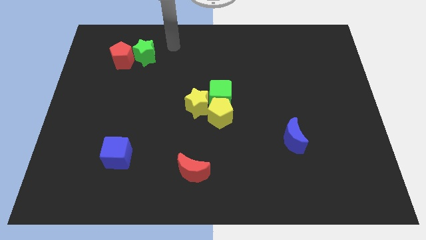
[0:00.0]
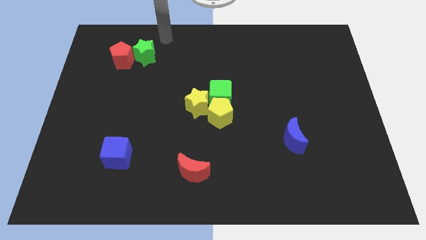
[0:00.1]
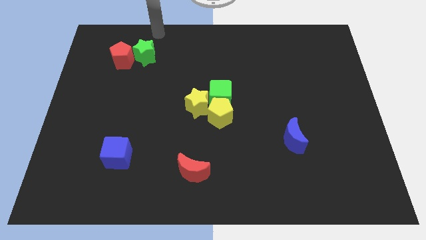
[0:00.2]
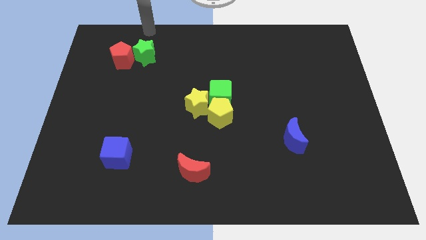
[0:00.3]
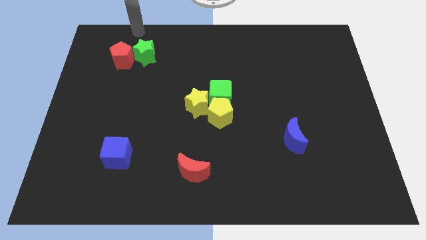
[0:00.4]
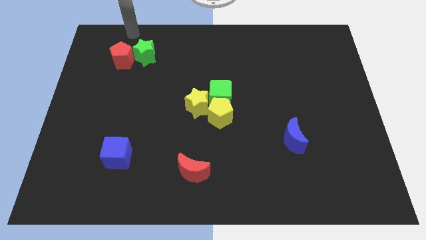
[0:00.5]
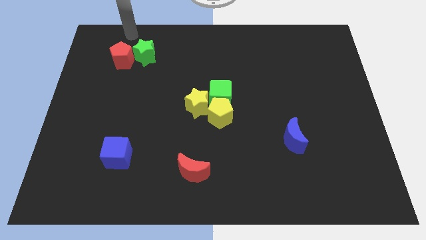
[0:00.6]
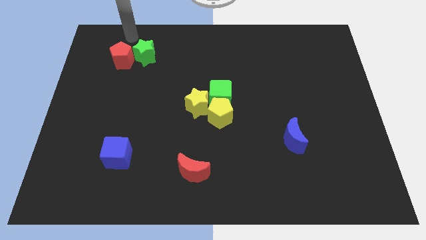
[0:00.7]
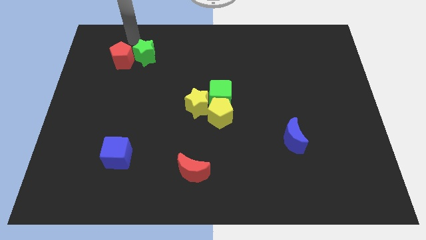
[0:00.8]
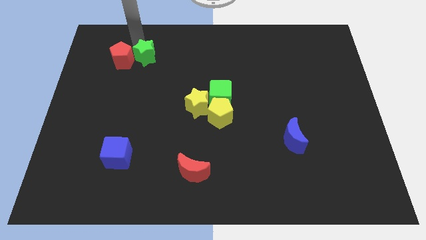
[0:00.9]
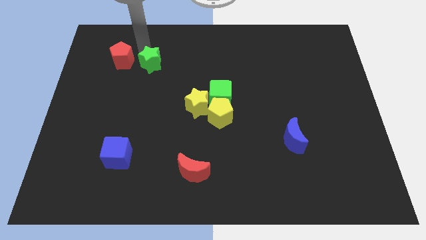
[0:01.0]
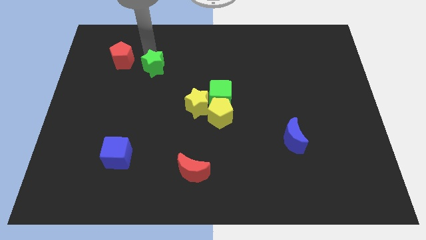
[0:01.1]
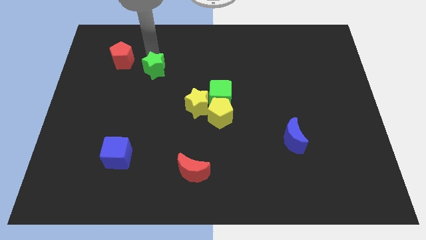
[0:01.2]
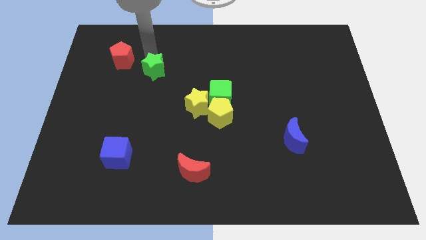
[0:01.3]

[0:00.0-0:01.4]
separate the green star from the red penatgon

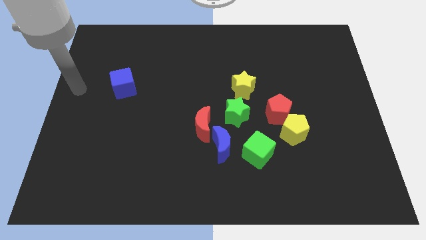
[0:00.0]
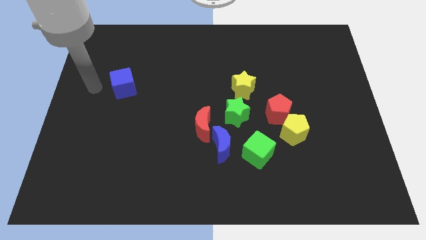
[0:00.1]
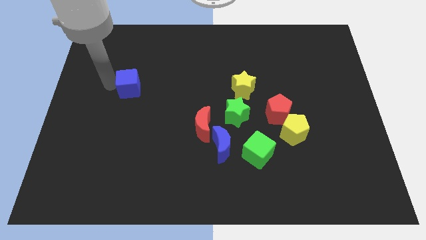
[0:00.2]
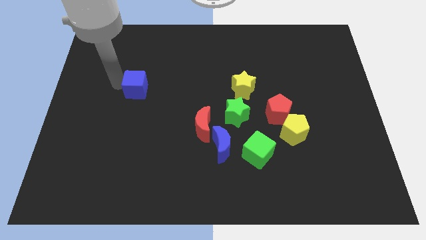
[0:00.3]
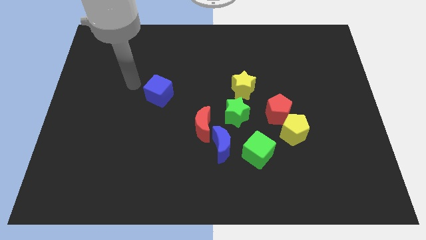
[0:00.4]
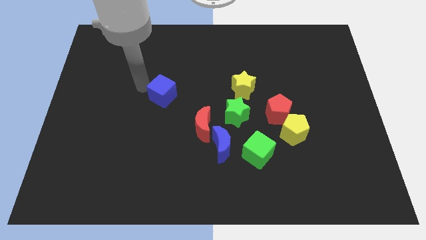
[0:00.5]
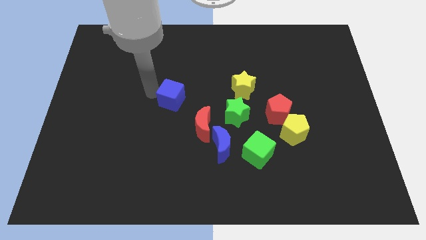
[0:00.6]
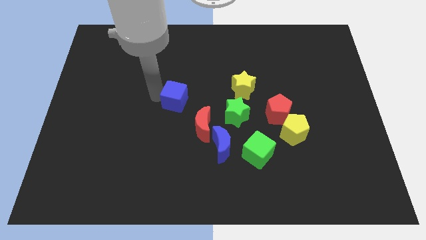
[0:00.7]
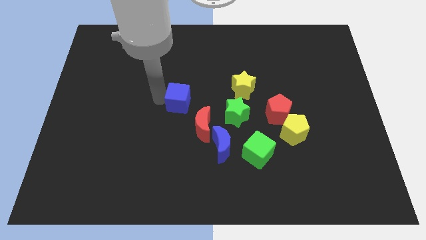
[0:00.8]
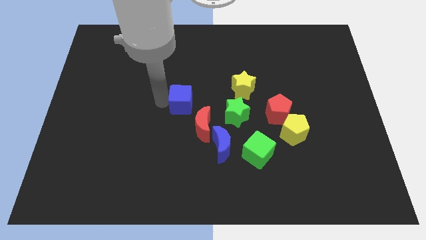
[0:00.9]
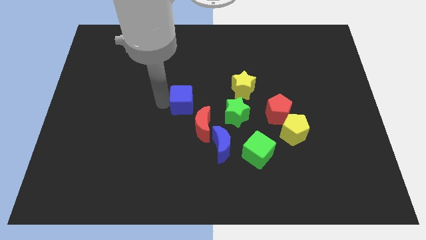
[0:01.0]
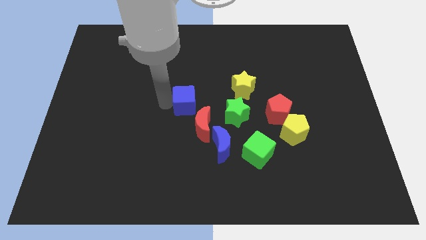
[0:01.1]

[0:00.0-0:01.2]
push the blue cube slightly towards the green star

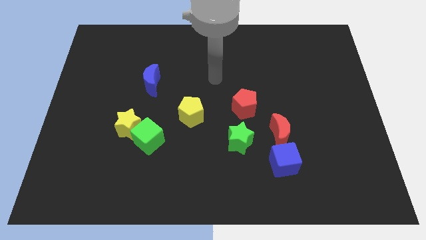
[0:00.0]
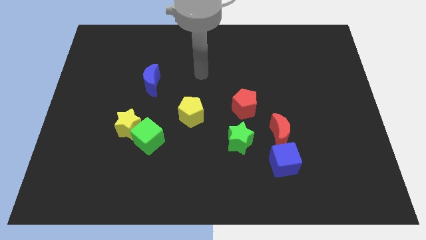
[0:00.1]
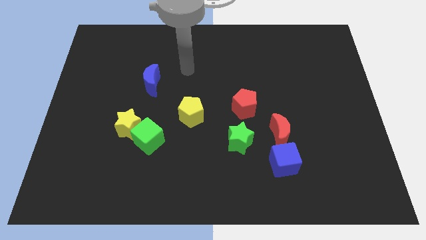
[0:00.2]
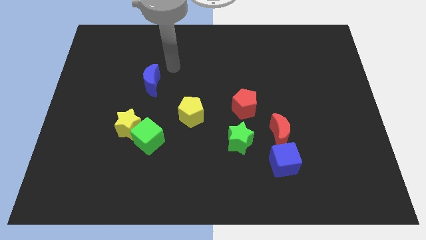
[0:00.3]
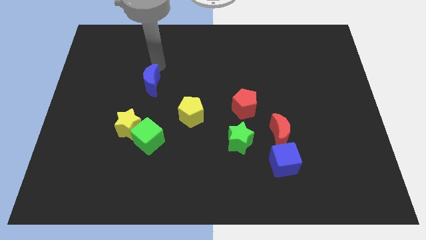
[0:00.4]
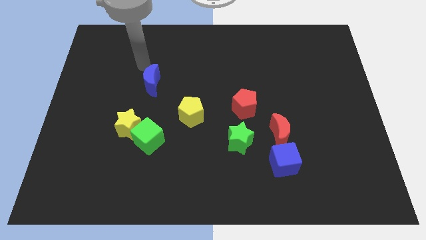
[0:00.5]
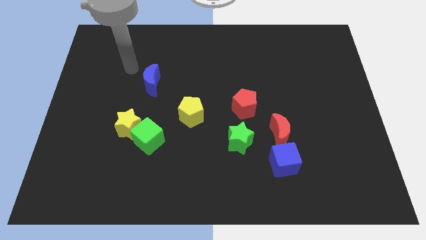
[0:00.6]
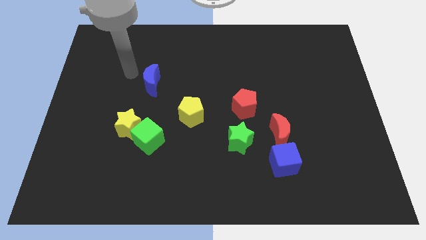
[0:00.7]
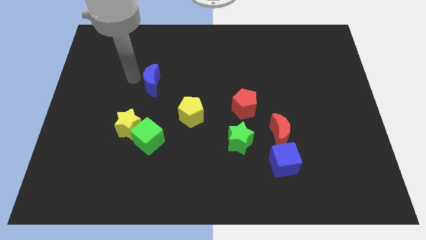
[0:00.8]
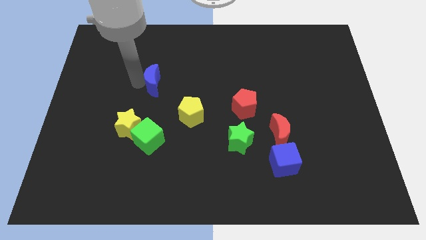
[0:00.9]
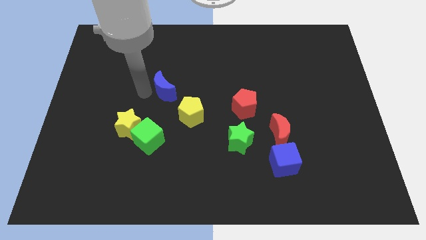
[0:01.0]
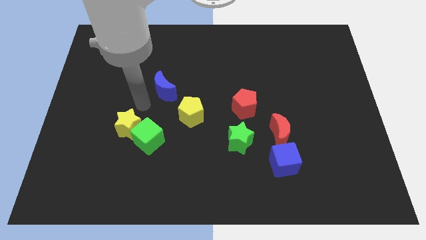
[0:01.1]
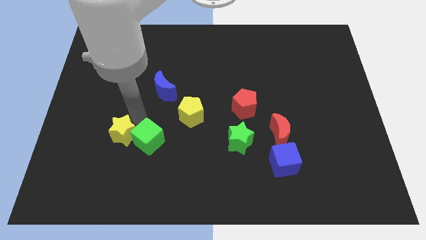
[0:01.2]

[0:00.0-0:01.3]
place blue moon to the top left of yellow pentagon

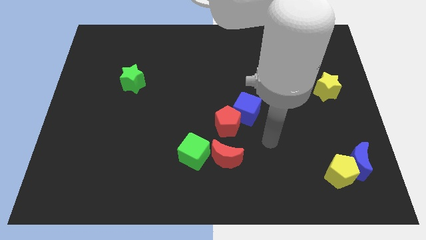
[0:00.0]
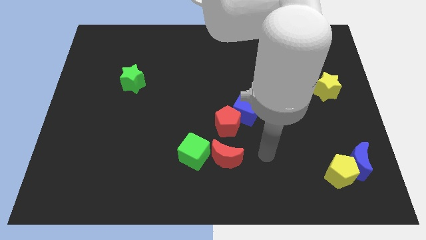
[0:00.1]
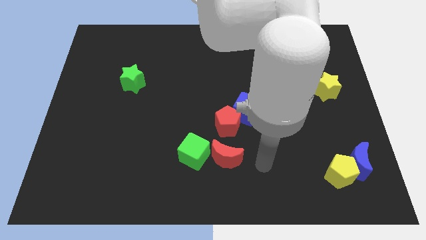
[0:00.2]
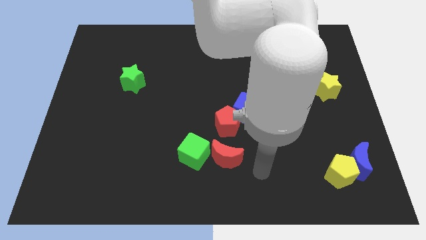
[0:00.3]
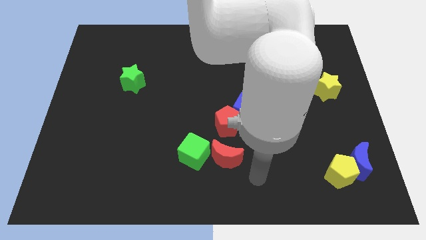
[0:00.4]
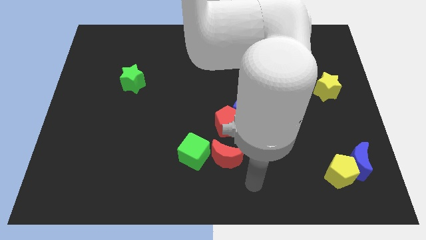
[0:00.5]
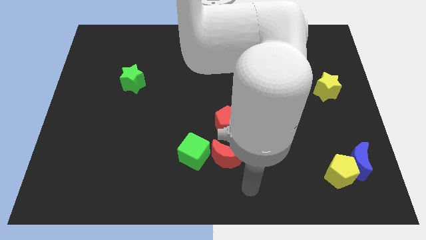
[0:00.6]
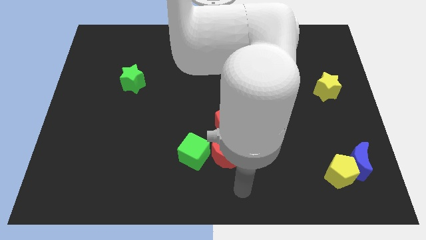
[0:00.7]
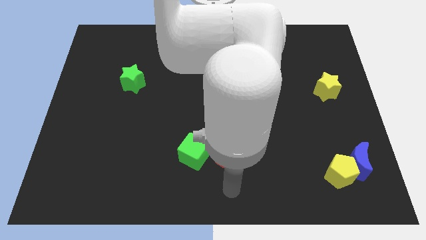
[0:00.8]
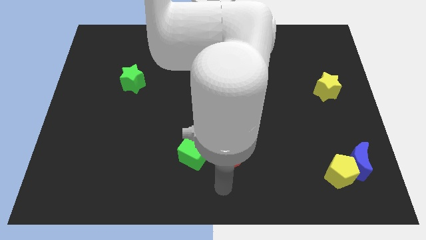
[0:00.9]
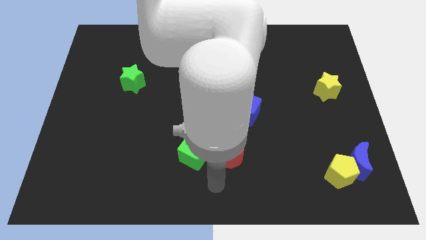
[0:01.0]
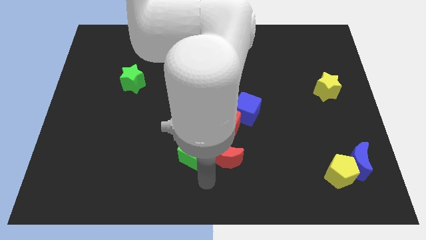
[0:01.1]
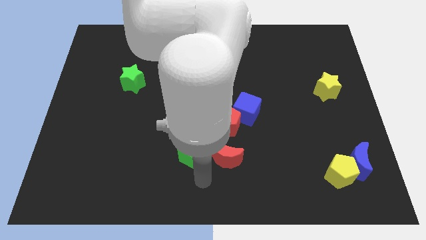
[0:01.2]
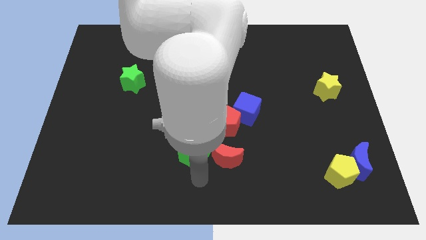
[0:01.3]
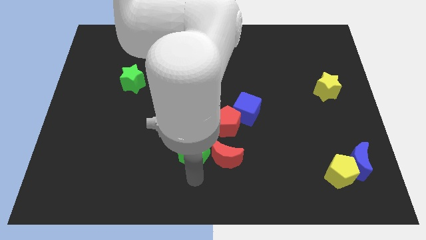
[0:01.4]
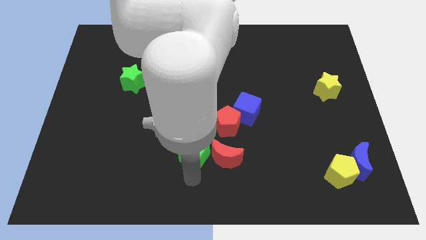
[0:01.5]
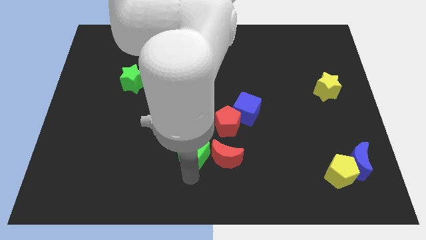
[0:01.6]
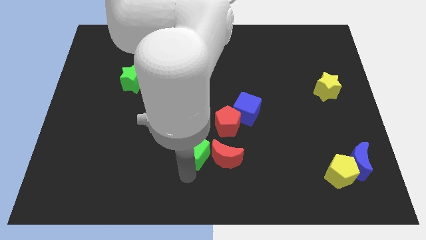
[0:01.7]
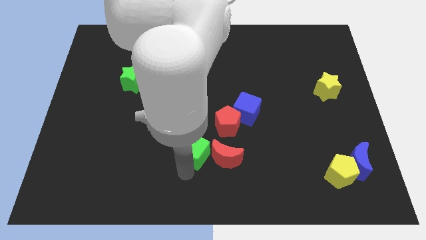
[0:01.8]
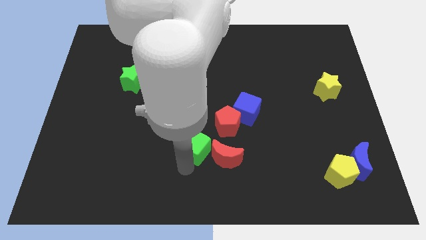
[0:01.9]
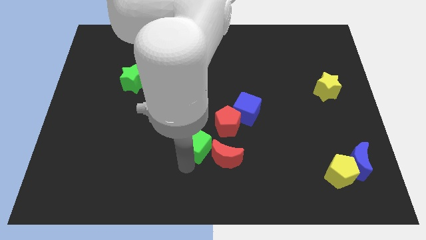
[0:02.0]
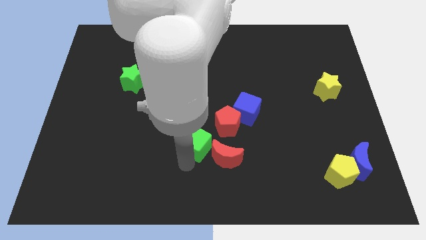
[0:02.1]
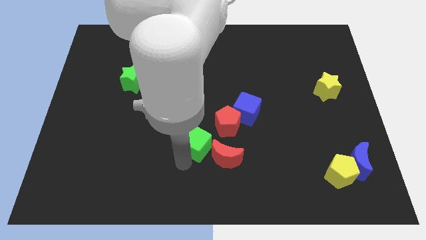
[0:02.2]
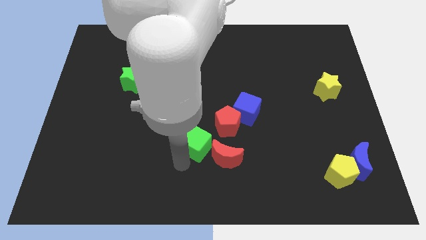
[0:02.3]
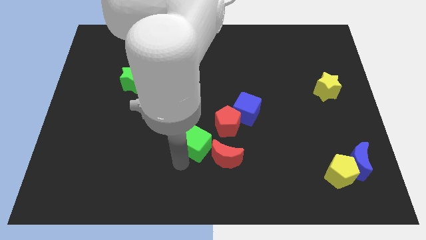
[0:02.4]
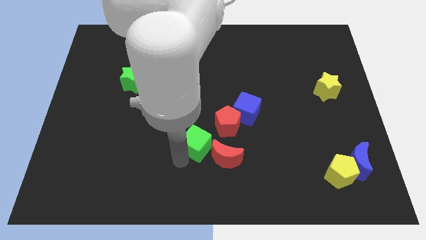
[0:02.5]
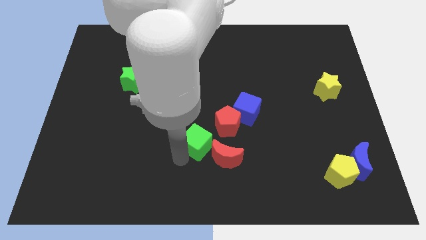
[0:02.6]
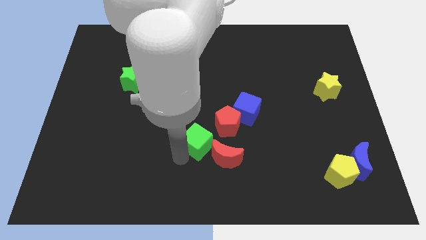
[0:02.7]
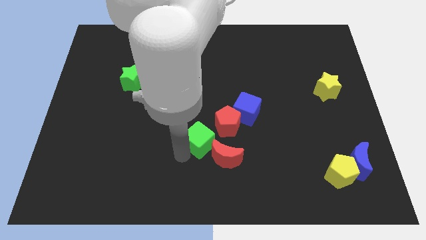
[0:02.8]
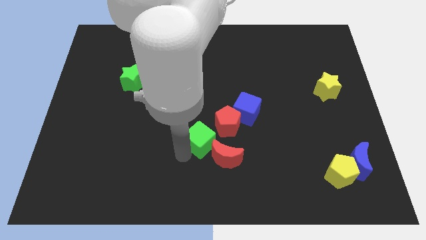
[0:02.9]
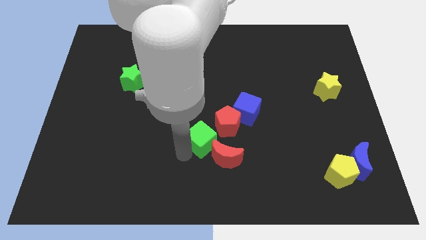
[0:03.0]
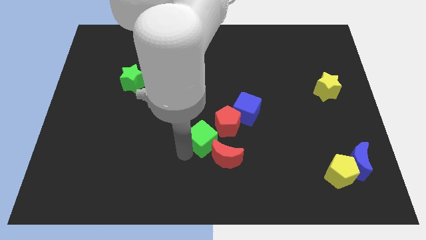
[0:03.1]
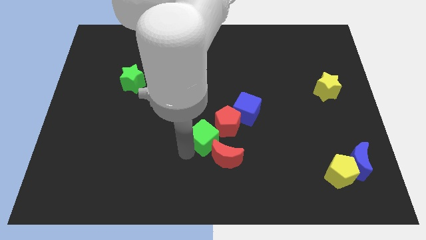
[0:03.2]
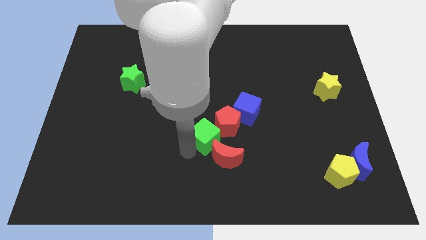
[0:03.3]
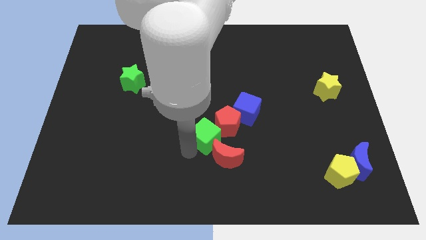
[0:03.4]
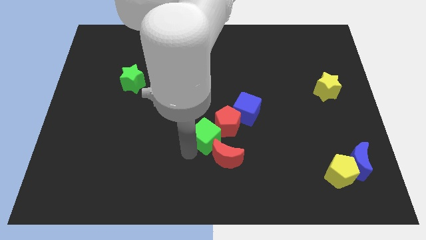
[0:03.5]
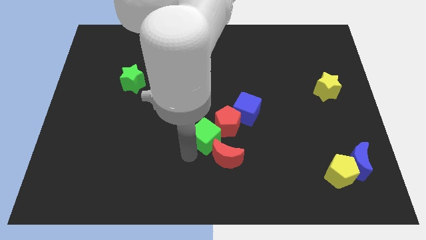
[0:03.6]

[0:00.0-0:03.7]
move the green cube to the bottom left of the red pentagon

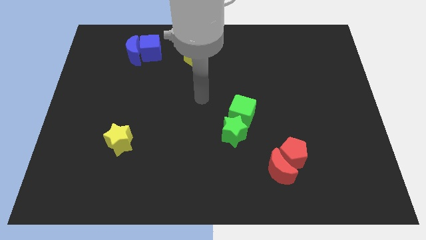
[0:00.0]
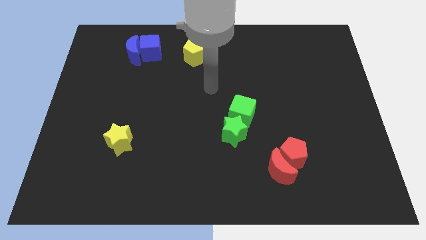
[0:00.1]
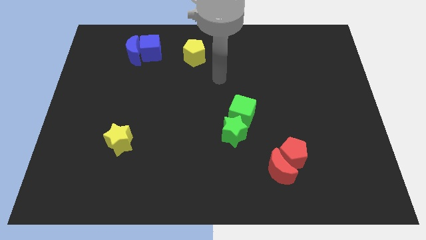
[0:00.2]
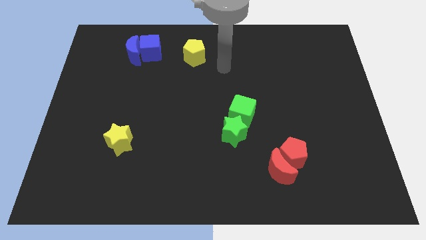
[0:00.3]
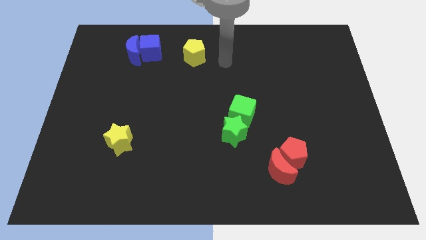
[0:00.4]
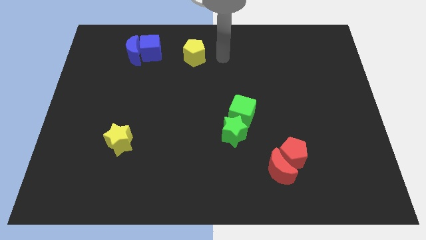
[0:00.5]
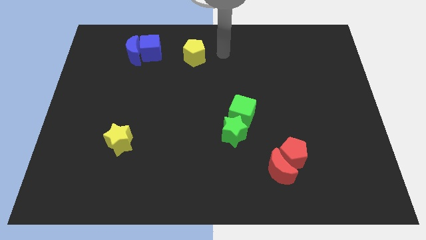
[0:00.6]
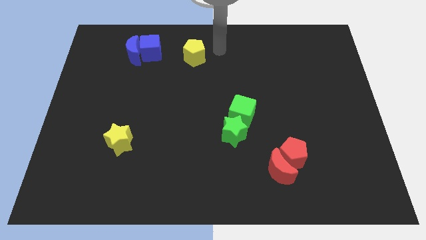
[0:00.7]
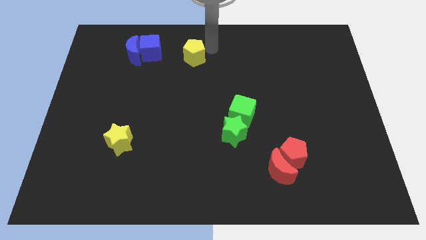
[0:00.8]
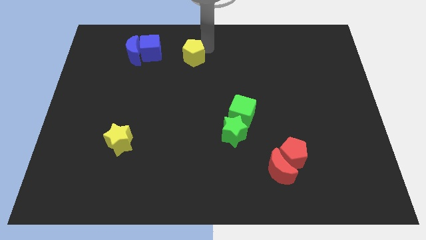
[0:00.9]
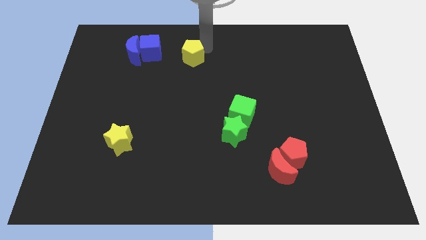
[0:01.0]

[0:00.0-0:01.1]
tap your arm on top right of yellow pentagon

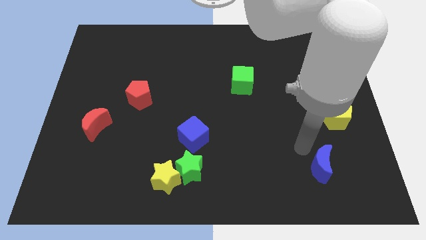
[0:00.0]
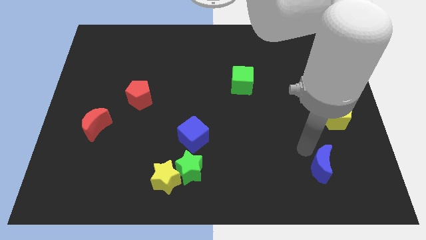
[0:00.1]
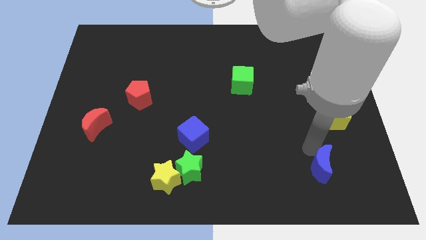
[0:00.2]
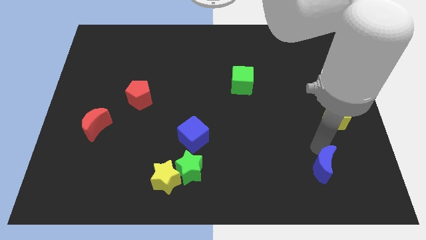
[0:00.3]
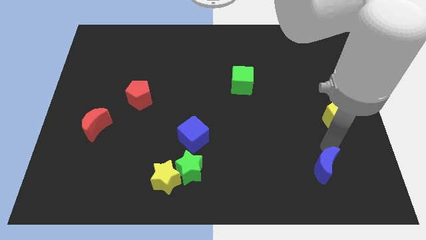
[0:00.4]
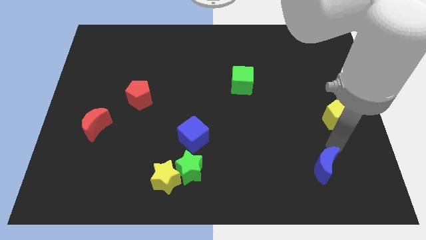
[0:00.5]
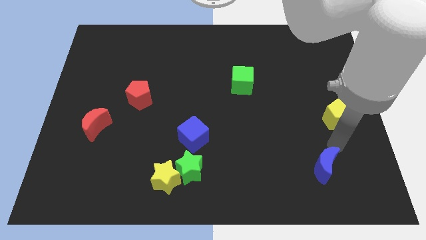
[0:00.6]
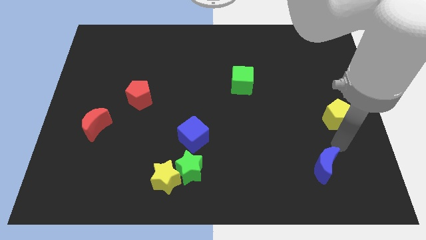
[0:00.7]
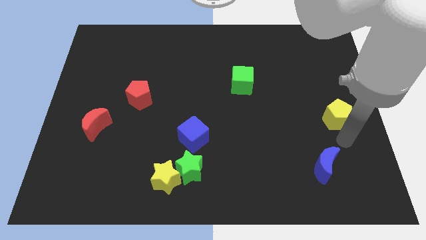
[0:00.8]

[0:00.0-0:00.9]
slightly push the blue moon towards the bottom side of the board
